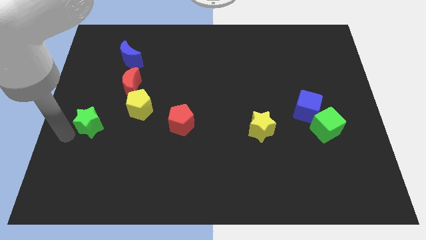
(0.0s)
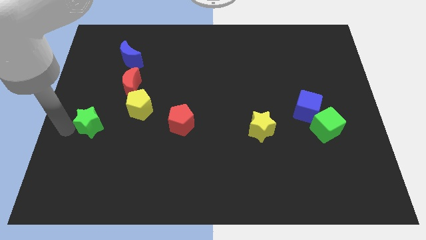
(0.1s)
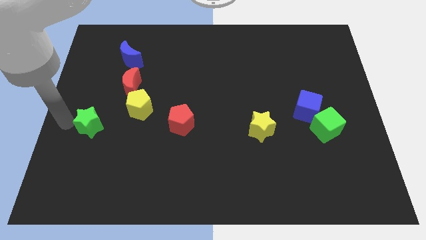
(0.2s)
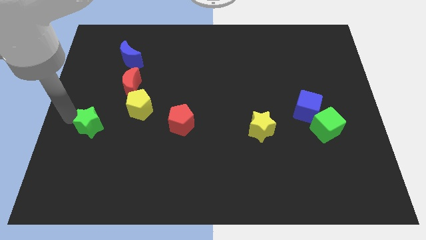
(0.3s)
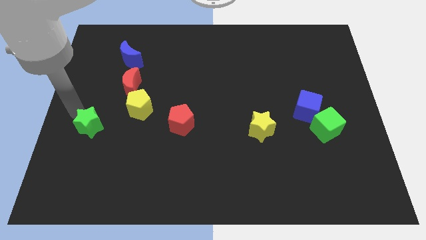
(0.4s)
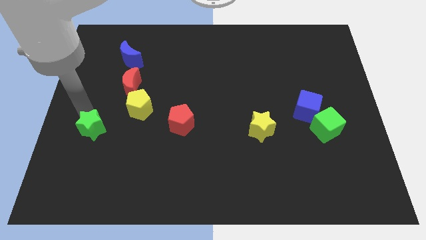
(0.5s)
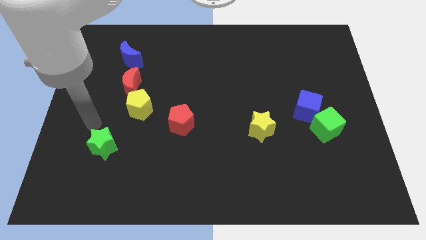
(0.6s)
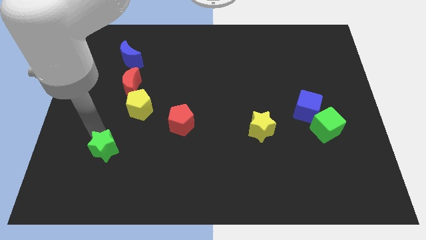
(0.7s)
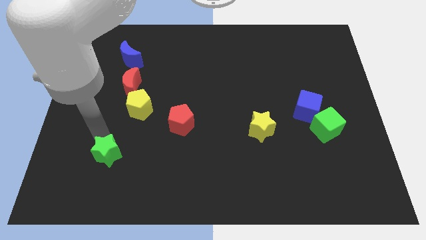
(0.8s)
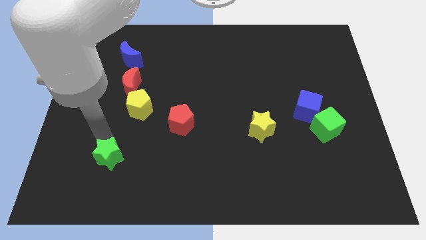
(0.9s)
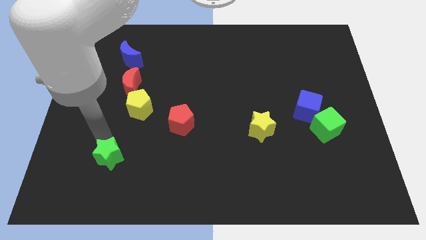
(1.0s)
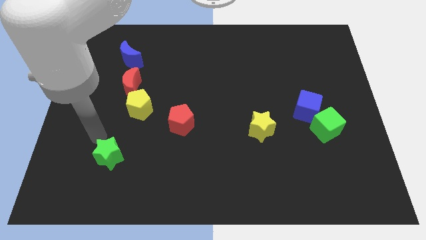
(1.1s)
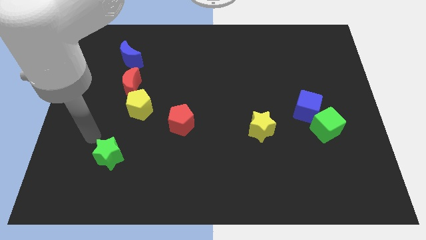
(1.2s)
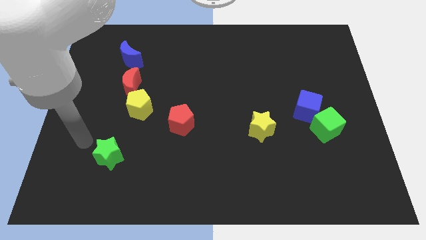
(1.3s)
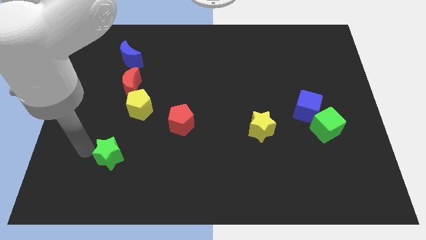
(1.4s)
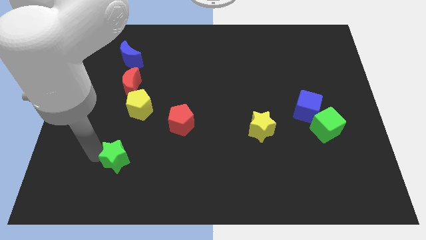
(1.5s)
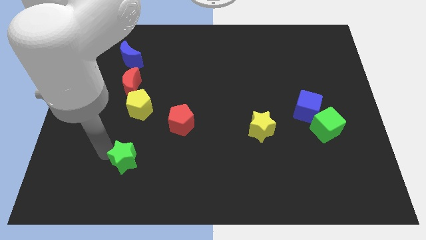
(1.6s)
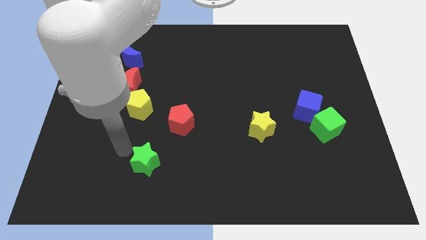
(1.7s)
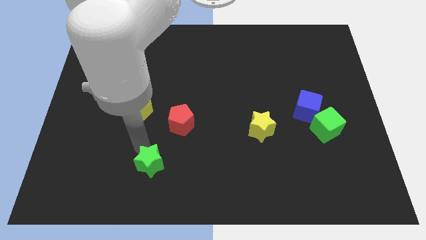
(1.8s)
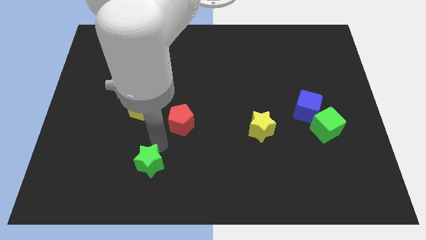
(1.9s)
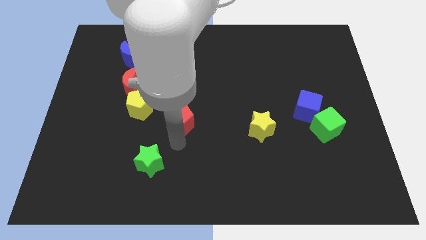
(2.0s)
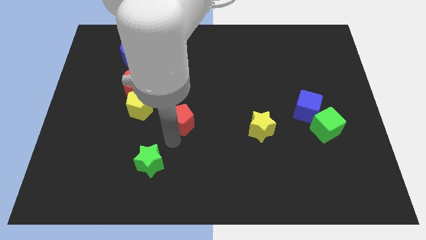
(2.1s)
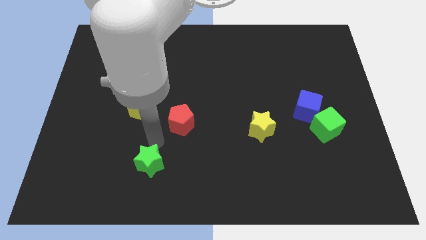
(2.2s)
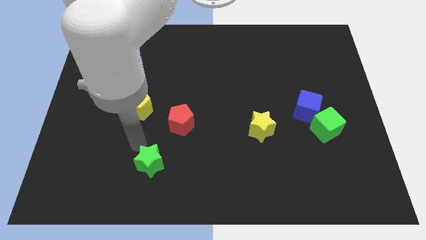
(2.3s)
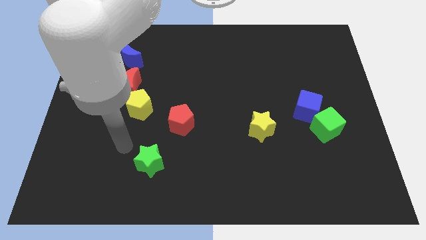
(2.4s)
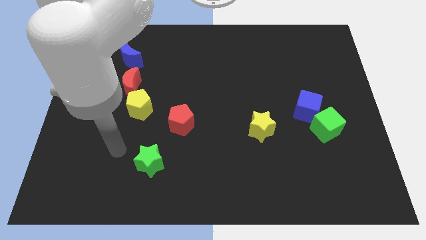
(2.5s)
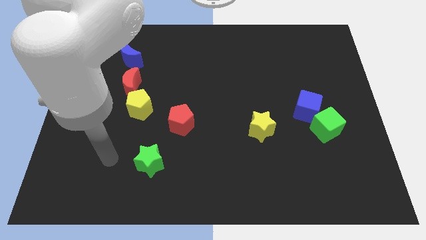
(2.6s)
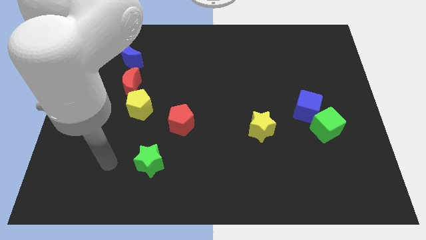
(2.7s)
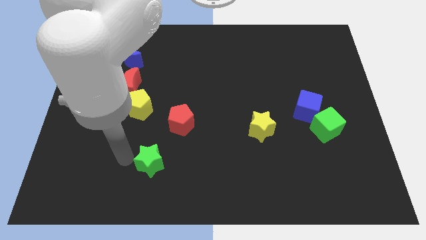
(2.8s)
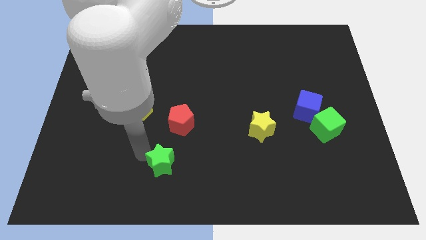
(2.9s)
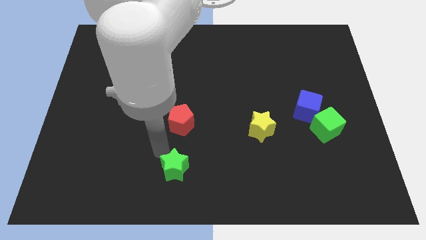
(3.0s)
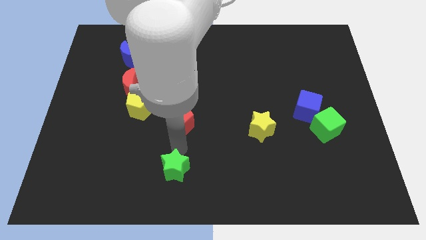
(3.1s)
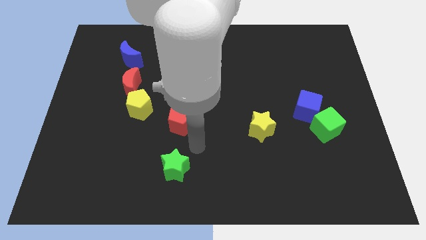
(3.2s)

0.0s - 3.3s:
move green star towards bottom center

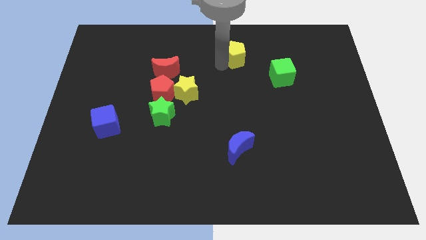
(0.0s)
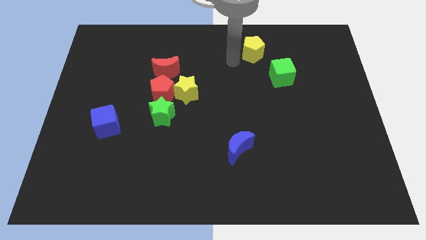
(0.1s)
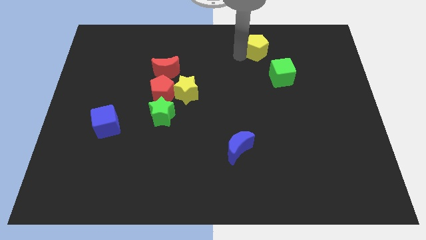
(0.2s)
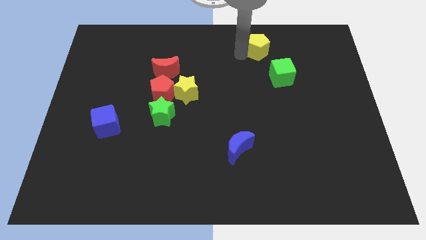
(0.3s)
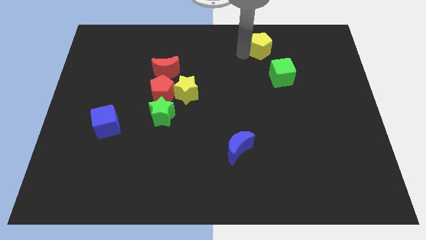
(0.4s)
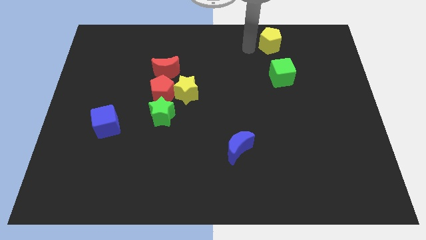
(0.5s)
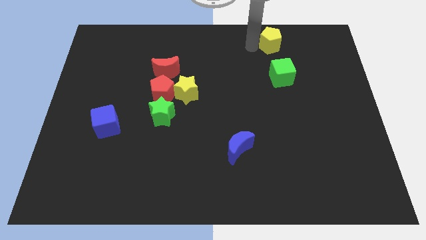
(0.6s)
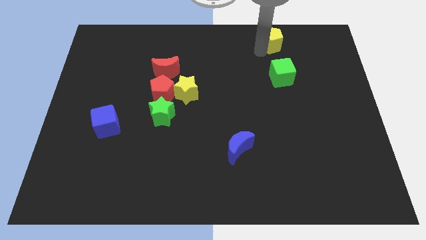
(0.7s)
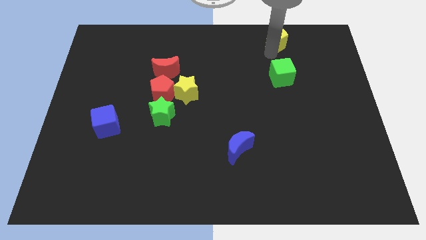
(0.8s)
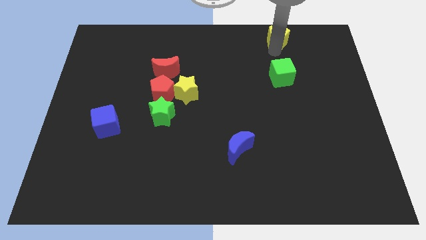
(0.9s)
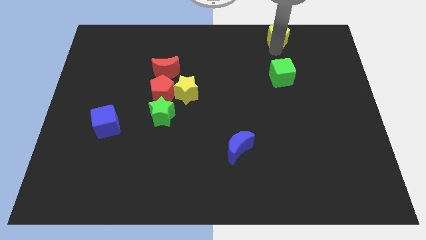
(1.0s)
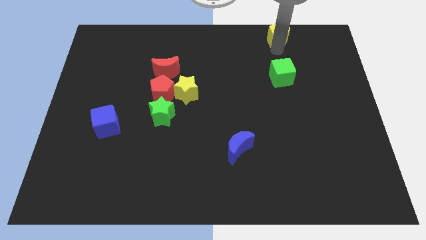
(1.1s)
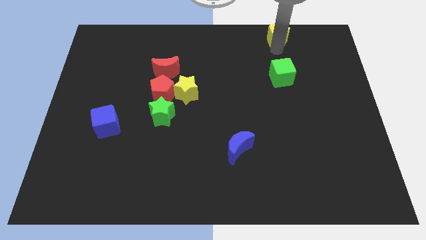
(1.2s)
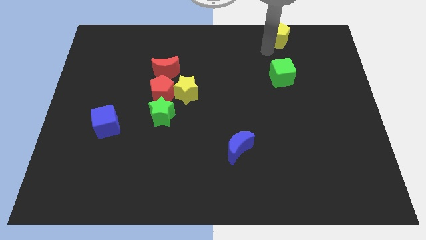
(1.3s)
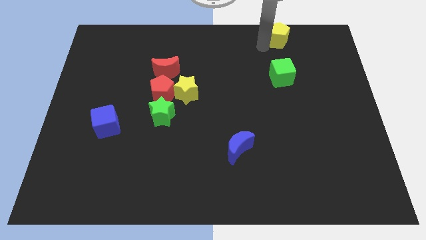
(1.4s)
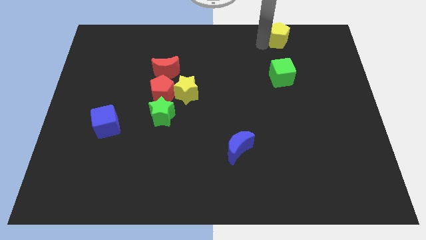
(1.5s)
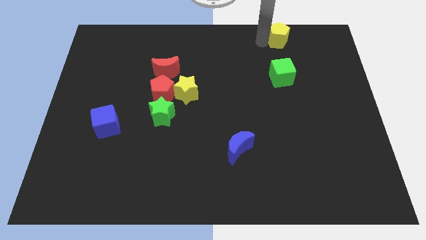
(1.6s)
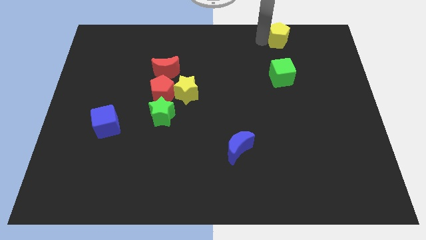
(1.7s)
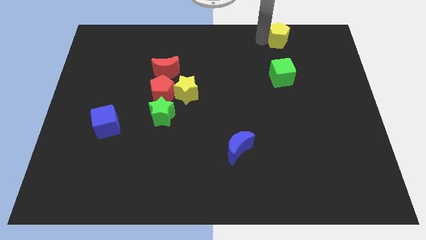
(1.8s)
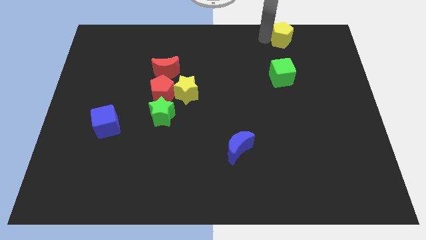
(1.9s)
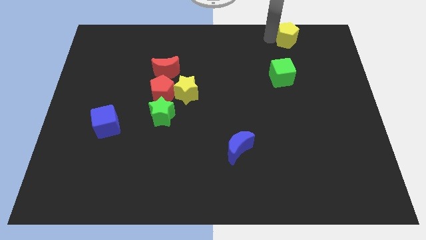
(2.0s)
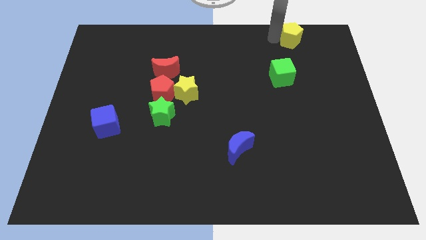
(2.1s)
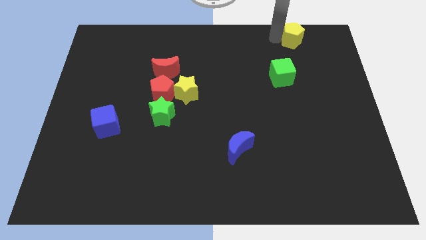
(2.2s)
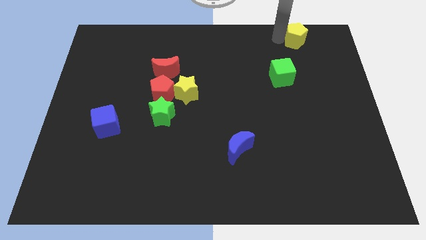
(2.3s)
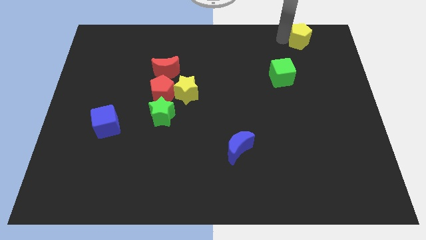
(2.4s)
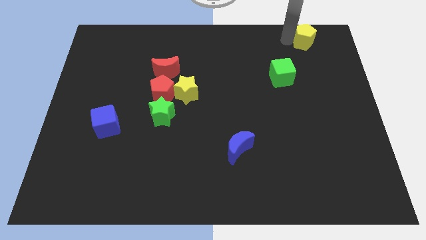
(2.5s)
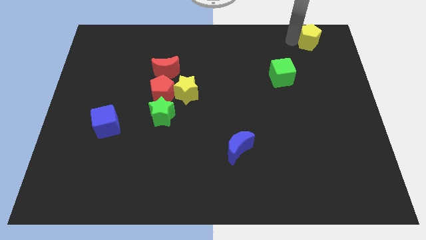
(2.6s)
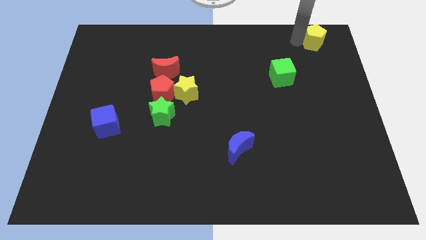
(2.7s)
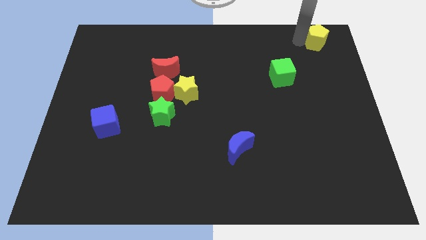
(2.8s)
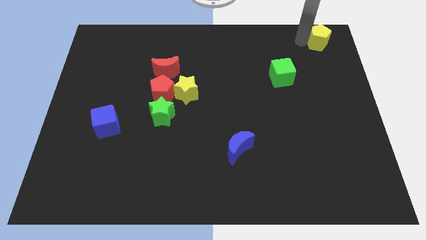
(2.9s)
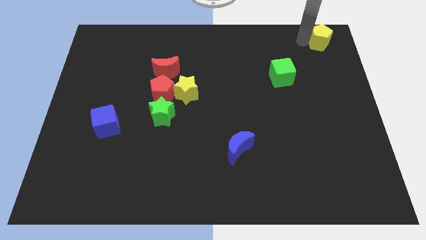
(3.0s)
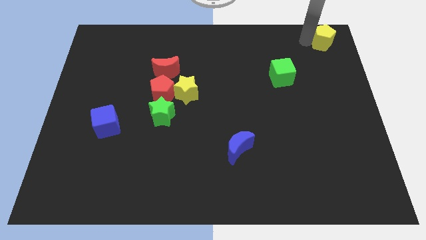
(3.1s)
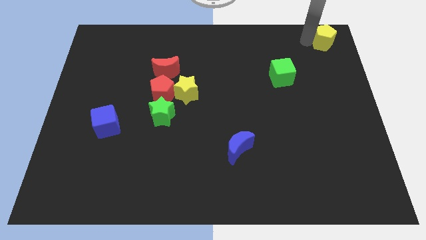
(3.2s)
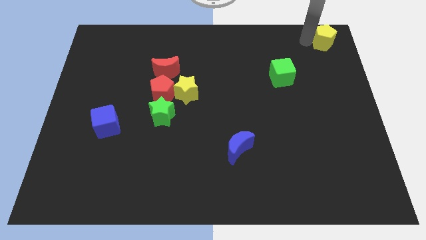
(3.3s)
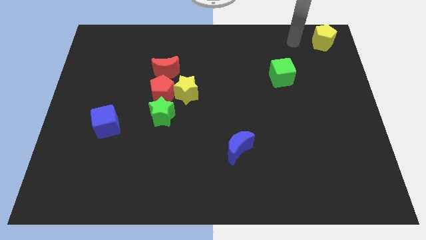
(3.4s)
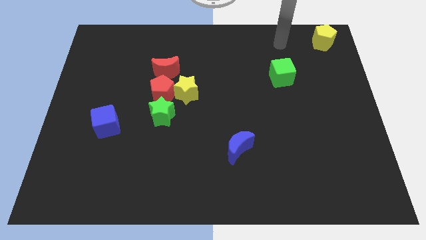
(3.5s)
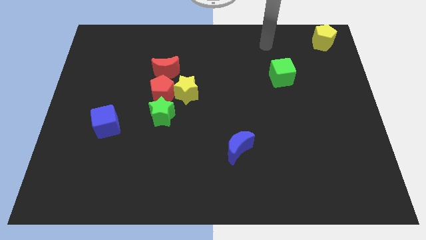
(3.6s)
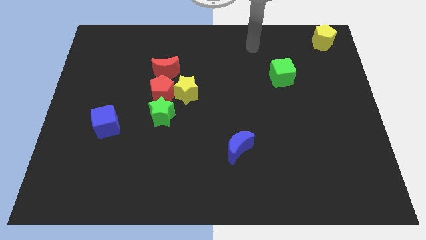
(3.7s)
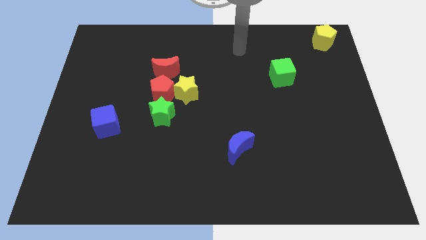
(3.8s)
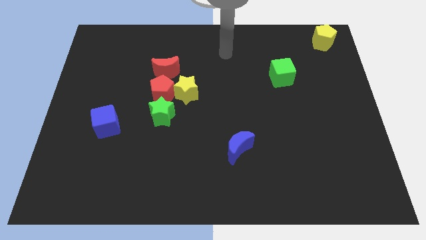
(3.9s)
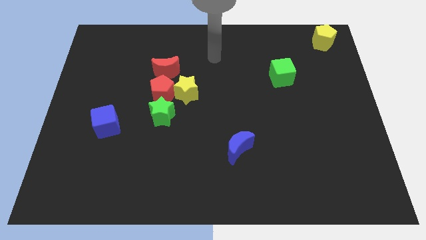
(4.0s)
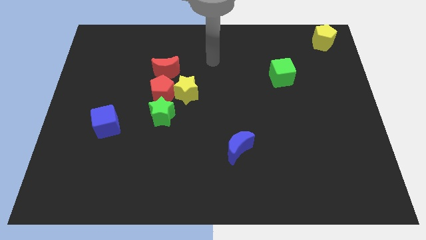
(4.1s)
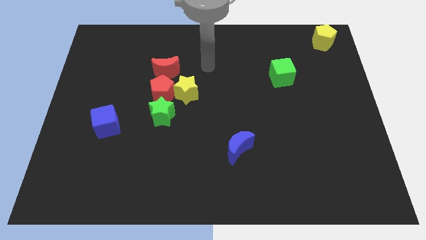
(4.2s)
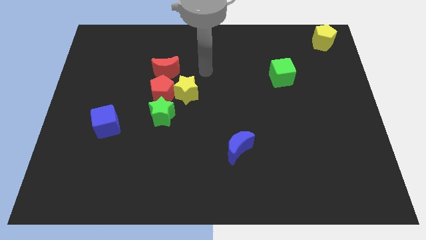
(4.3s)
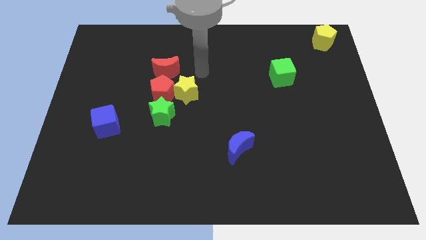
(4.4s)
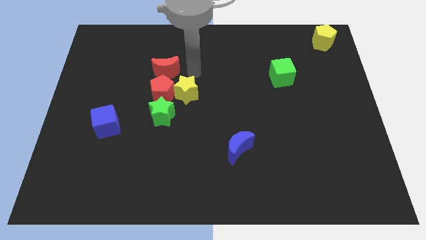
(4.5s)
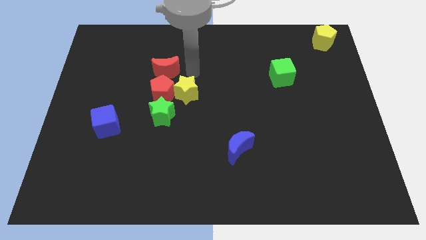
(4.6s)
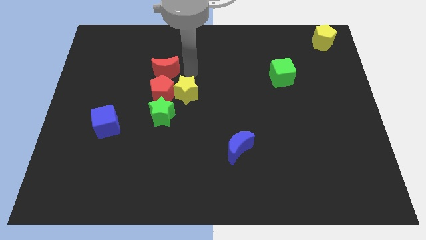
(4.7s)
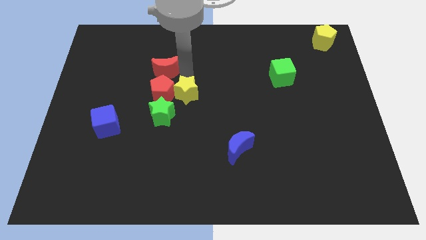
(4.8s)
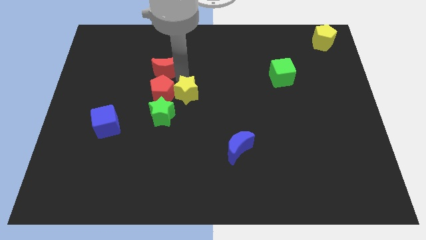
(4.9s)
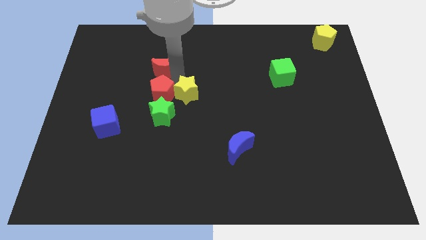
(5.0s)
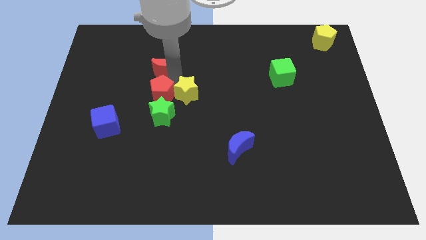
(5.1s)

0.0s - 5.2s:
move the yellow pentagon towards the top right

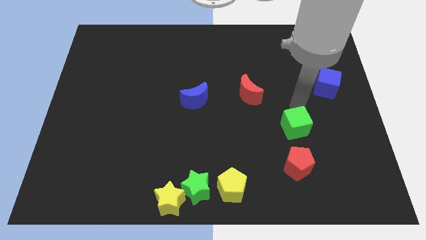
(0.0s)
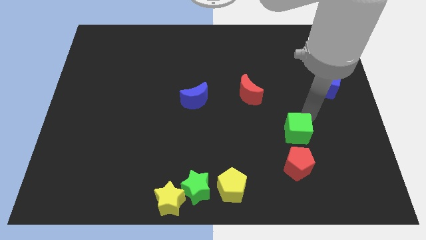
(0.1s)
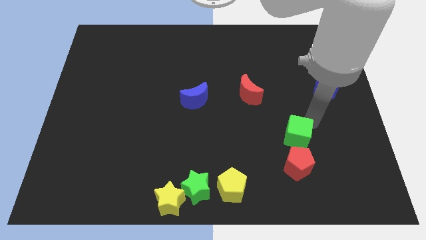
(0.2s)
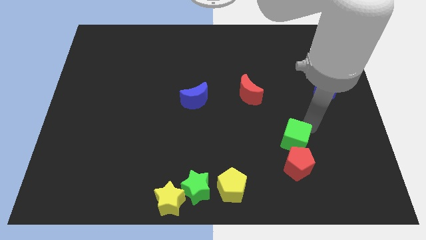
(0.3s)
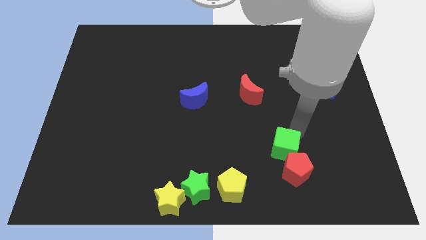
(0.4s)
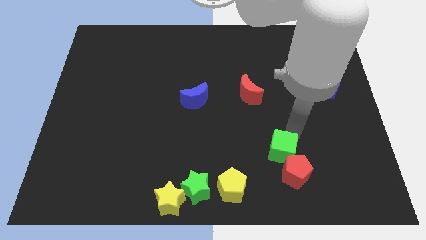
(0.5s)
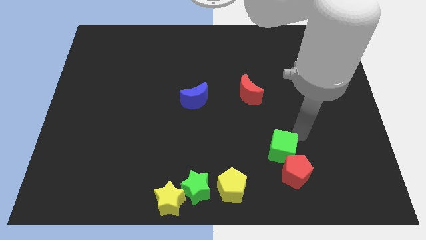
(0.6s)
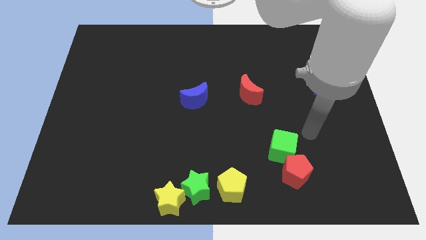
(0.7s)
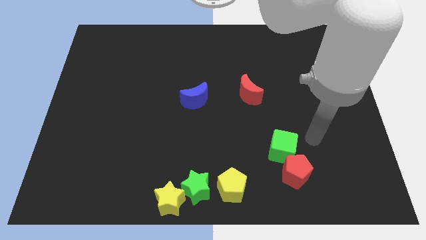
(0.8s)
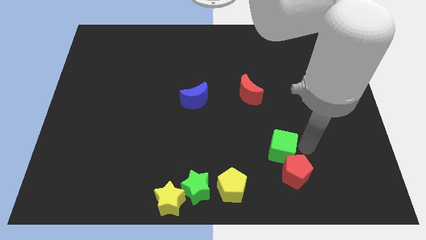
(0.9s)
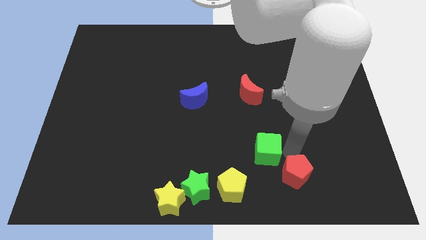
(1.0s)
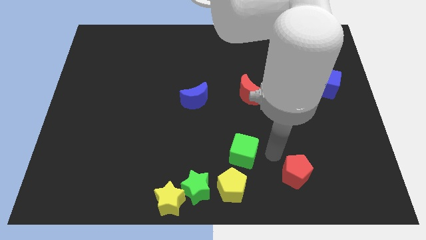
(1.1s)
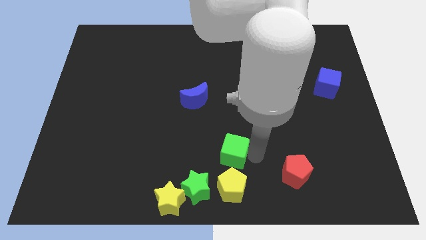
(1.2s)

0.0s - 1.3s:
push the green cube into the red pentagon on the bottom right of the board
